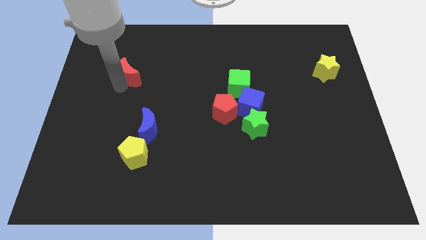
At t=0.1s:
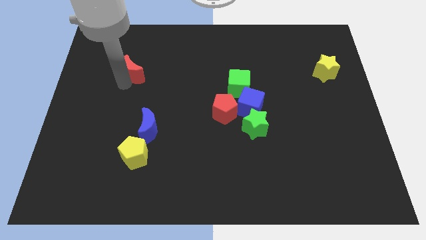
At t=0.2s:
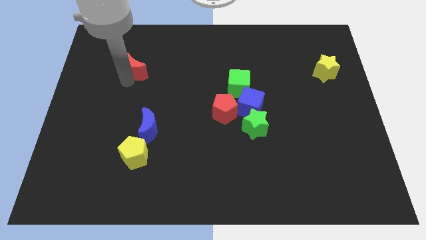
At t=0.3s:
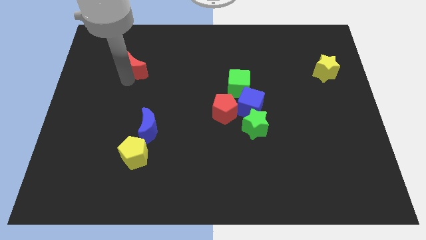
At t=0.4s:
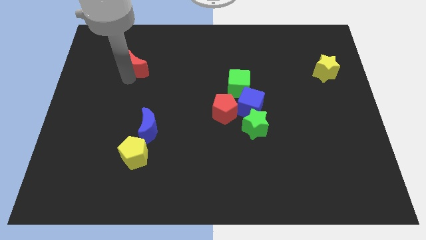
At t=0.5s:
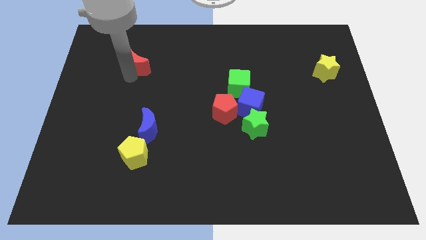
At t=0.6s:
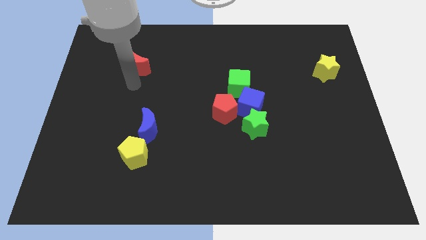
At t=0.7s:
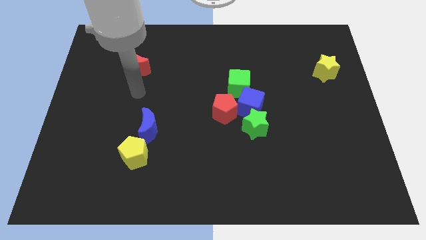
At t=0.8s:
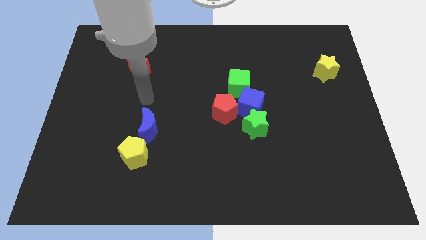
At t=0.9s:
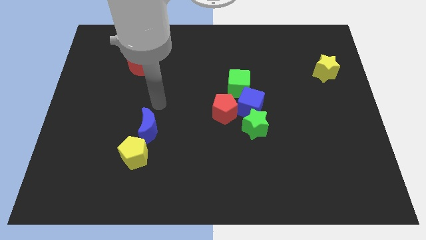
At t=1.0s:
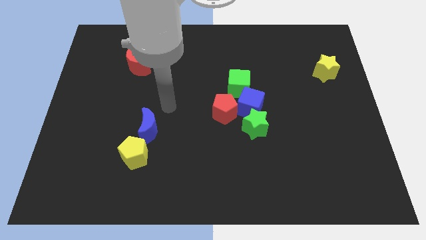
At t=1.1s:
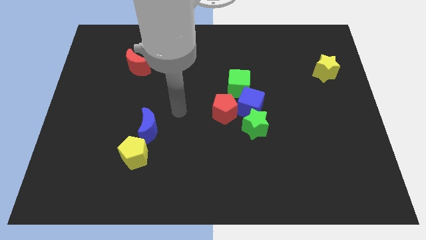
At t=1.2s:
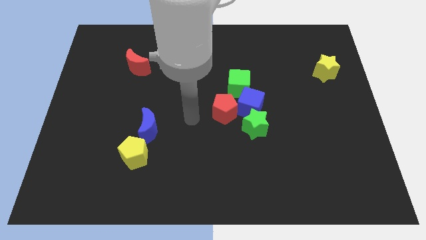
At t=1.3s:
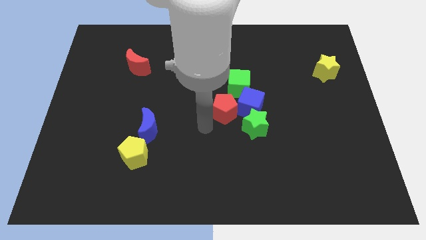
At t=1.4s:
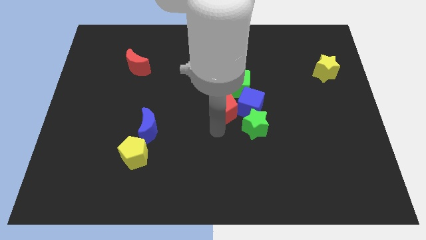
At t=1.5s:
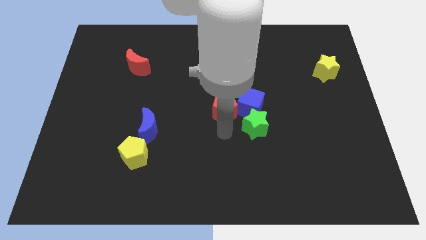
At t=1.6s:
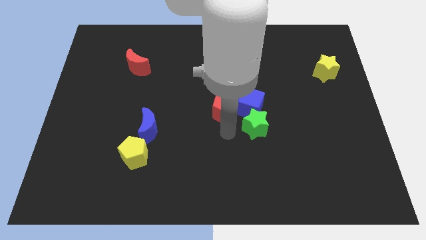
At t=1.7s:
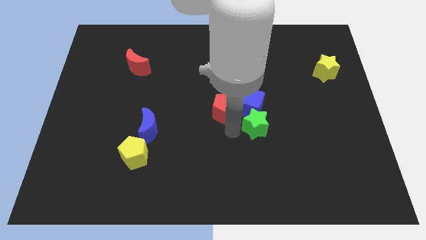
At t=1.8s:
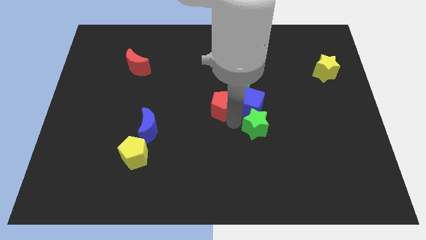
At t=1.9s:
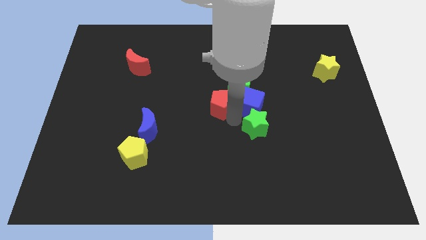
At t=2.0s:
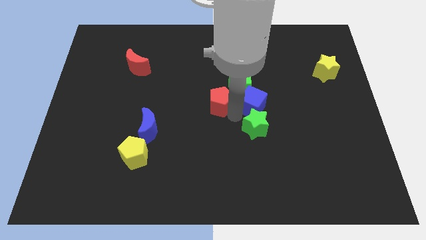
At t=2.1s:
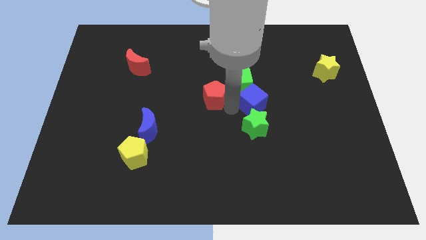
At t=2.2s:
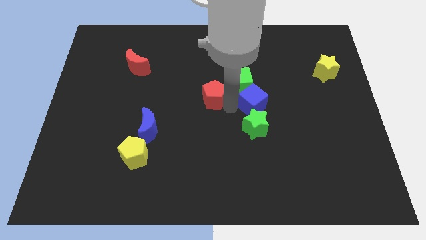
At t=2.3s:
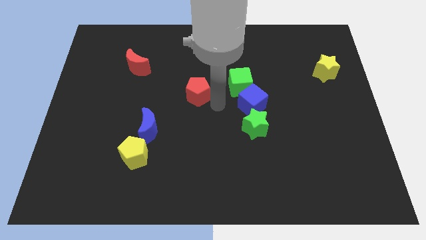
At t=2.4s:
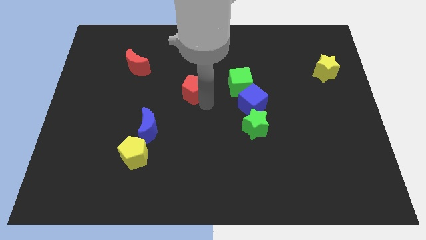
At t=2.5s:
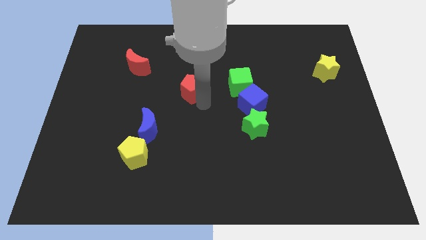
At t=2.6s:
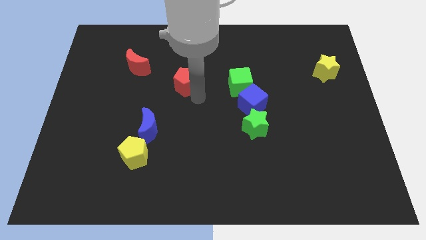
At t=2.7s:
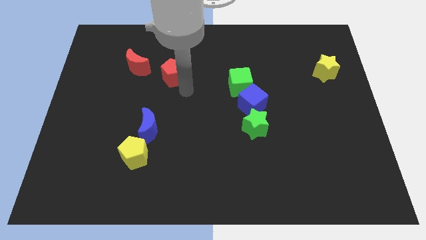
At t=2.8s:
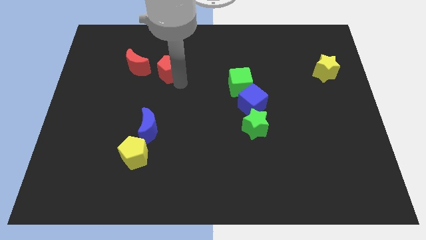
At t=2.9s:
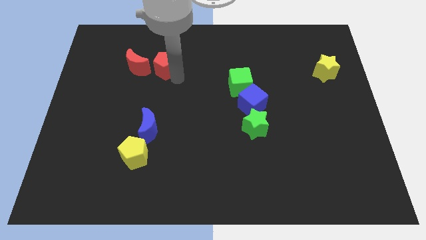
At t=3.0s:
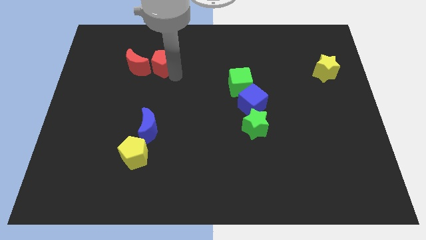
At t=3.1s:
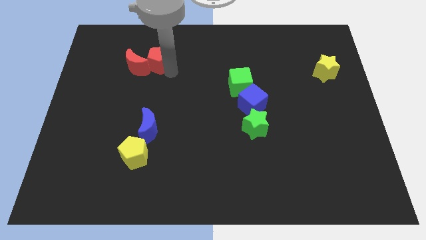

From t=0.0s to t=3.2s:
place the red pentagon to the right of the red crescent

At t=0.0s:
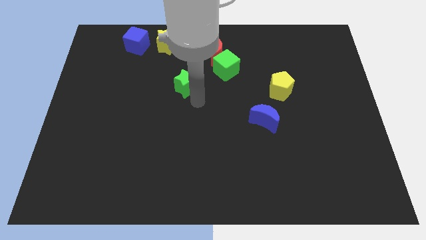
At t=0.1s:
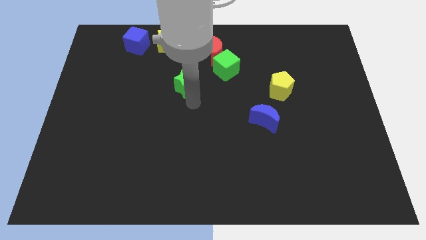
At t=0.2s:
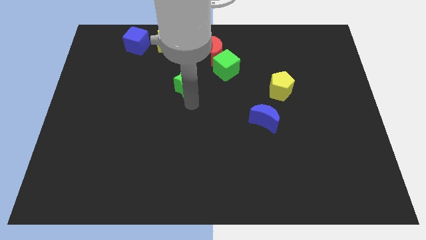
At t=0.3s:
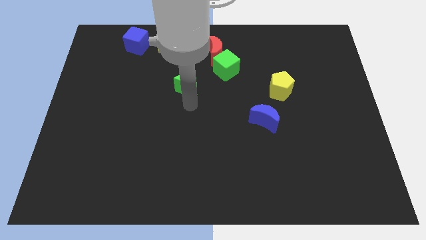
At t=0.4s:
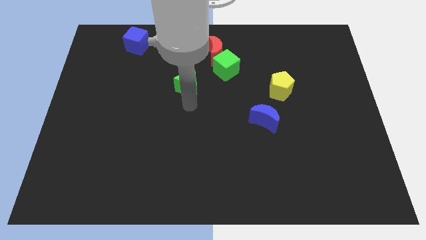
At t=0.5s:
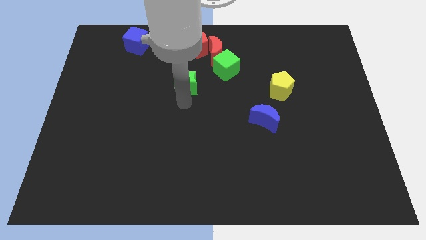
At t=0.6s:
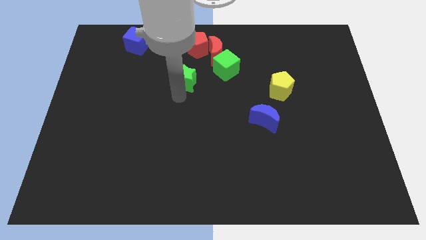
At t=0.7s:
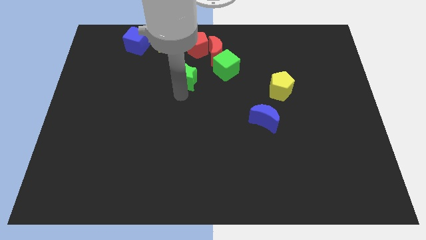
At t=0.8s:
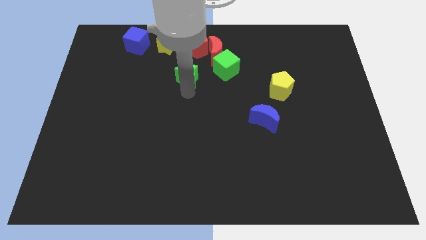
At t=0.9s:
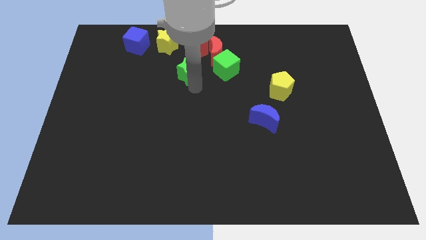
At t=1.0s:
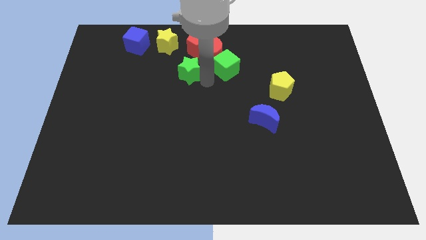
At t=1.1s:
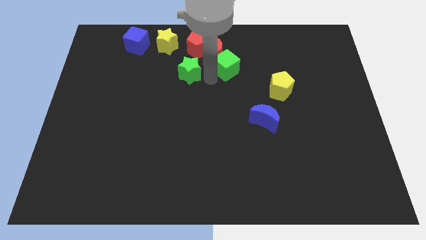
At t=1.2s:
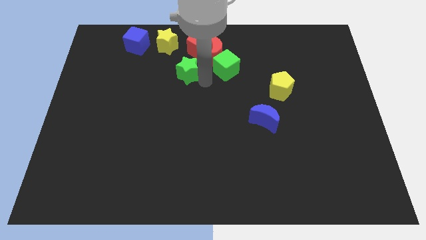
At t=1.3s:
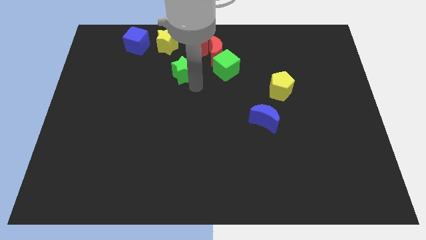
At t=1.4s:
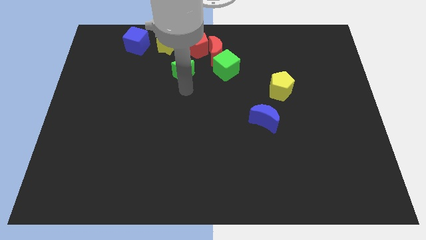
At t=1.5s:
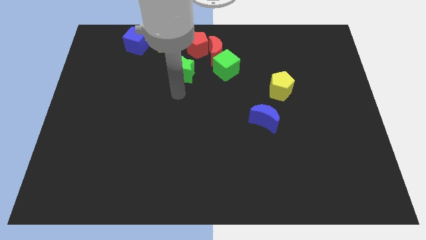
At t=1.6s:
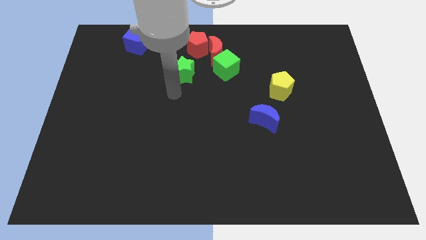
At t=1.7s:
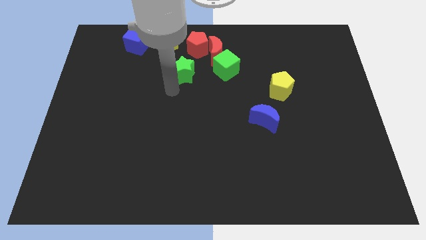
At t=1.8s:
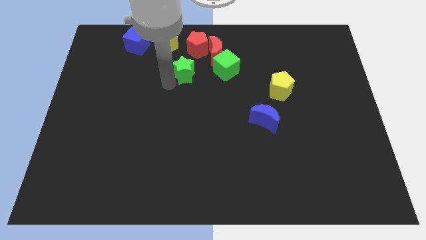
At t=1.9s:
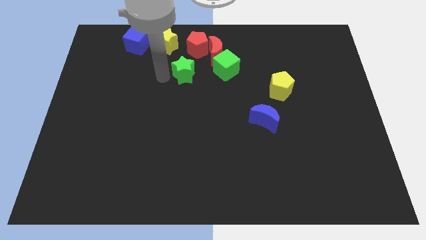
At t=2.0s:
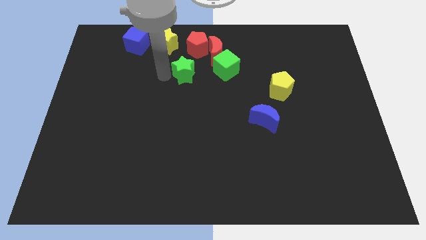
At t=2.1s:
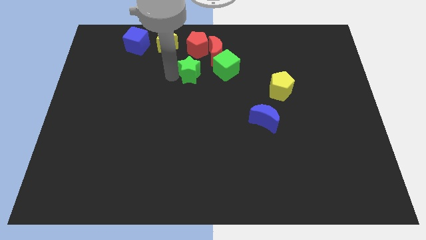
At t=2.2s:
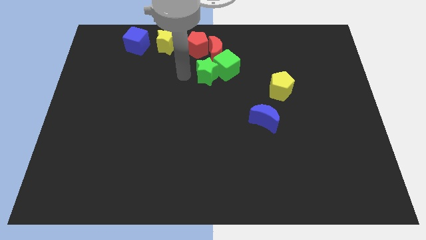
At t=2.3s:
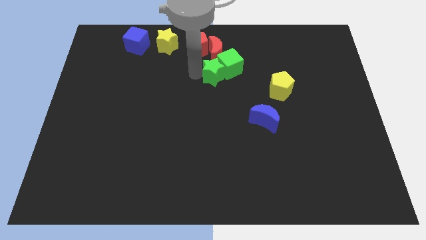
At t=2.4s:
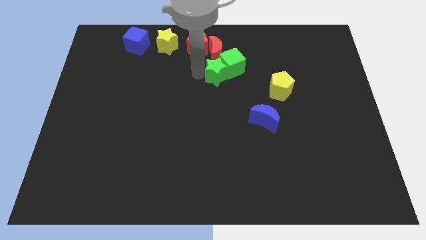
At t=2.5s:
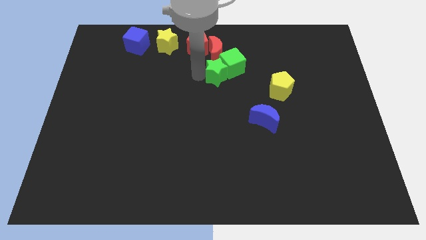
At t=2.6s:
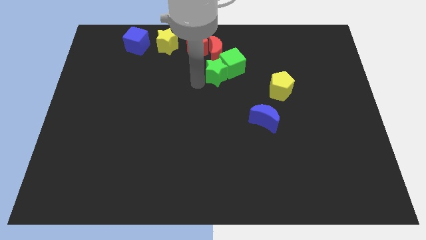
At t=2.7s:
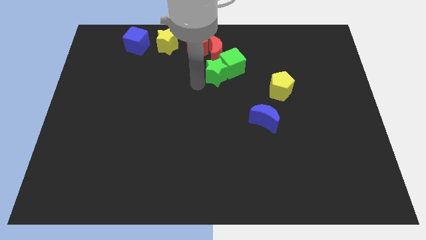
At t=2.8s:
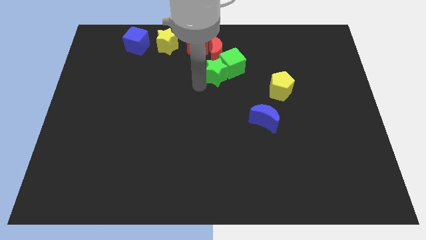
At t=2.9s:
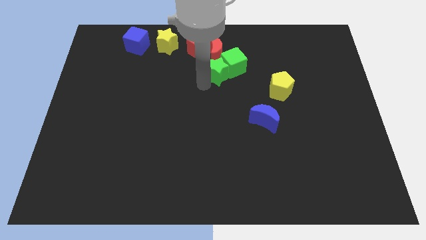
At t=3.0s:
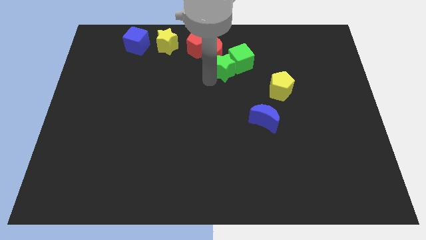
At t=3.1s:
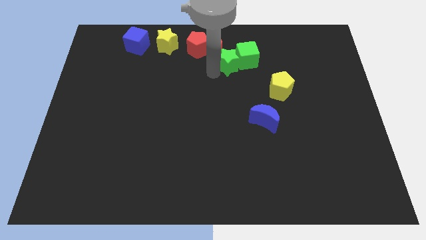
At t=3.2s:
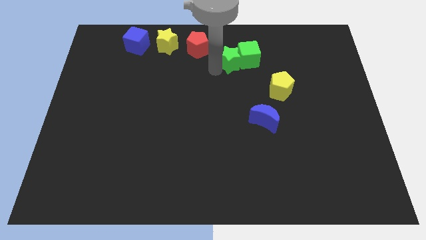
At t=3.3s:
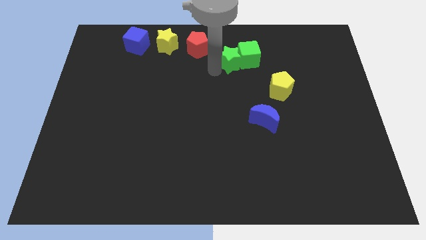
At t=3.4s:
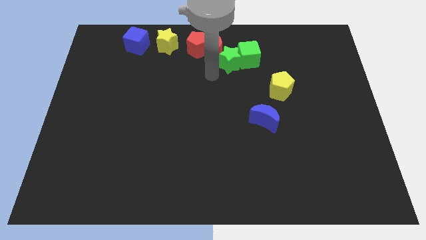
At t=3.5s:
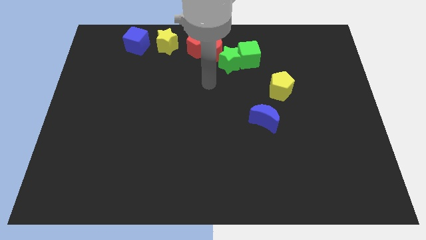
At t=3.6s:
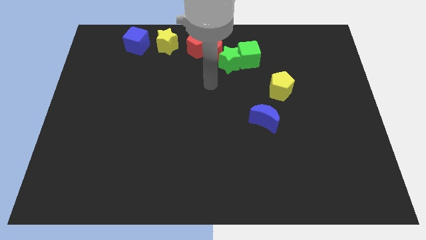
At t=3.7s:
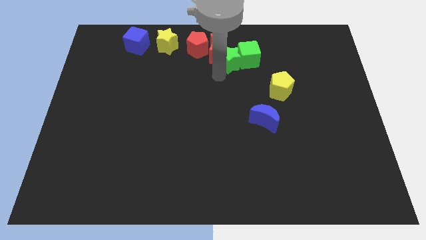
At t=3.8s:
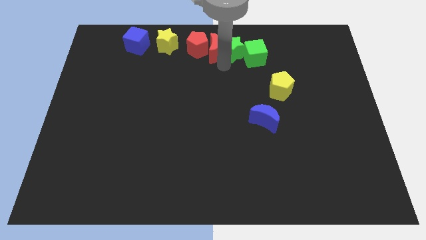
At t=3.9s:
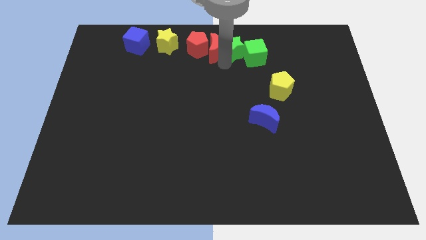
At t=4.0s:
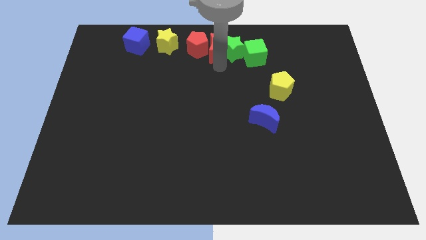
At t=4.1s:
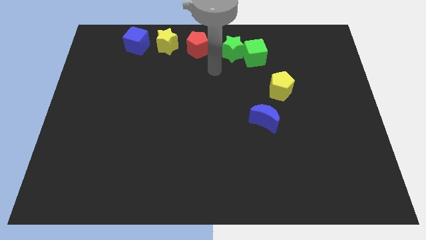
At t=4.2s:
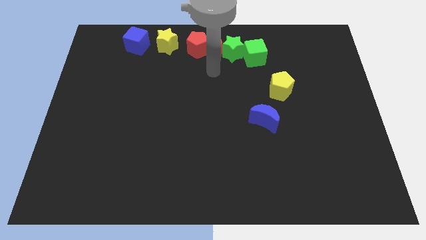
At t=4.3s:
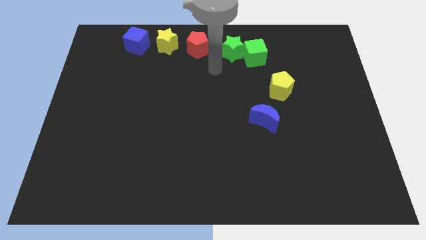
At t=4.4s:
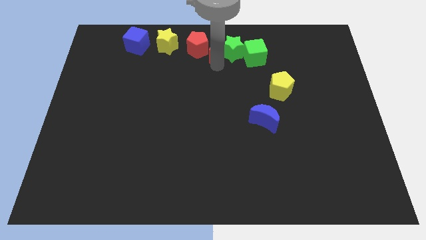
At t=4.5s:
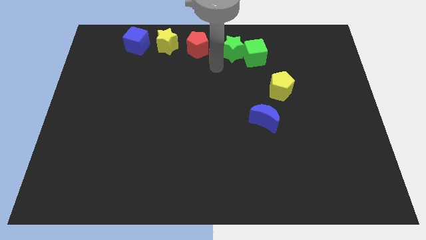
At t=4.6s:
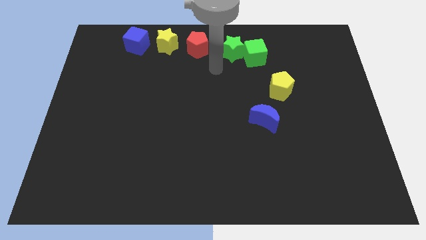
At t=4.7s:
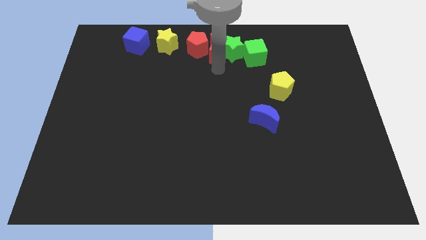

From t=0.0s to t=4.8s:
put the green star in between the green cube and the red moon

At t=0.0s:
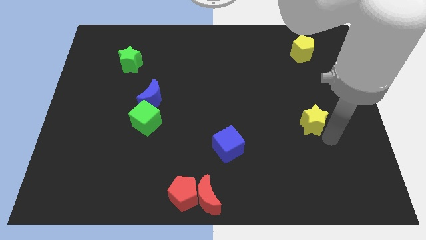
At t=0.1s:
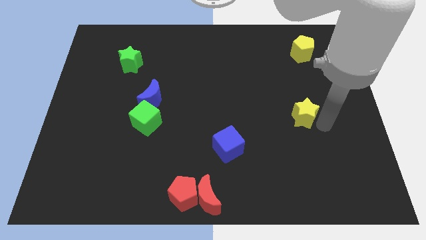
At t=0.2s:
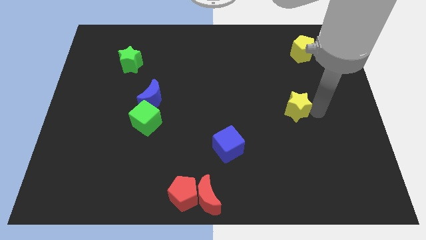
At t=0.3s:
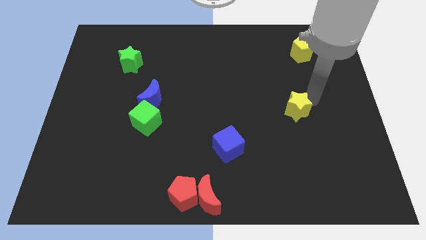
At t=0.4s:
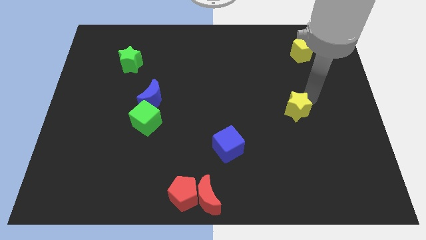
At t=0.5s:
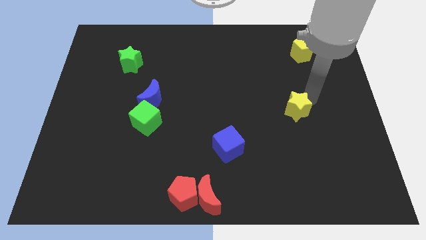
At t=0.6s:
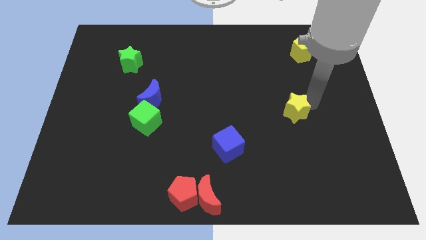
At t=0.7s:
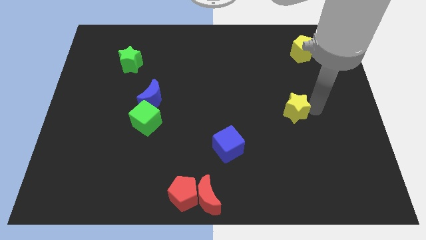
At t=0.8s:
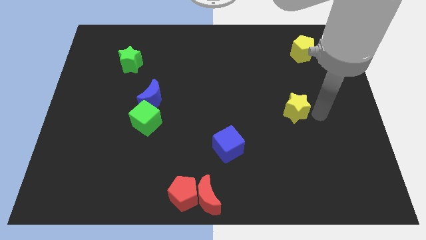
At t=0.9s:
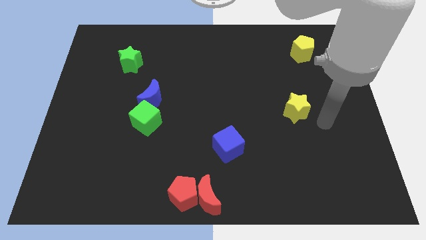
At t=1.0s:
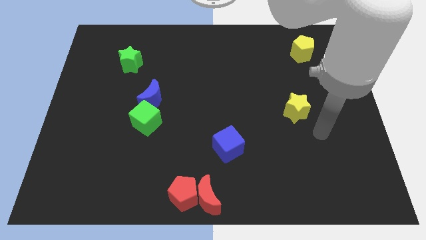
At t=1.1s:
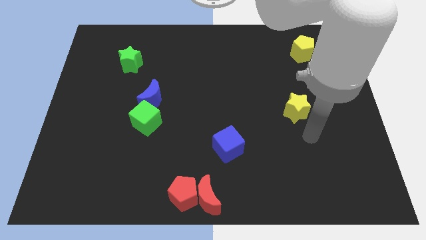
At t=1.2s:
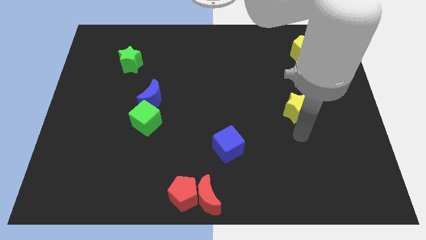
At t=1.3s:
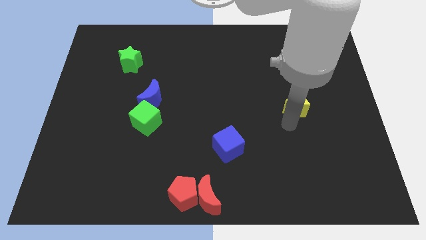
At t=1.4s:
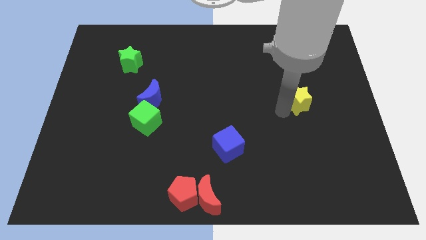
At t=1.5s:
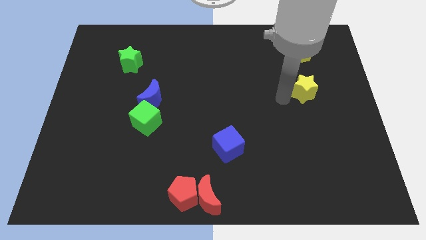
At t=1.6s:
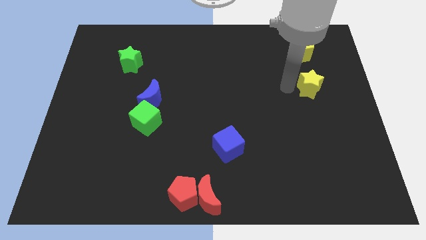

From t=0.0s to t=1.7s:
push the yellow star towards the yellow pentagon
